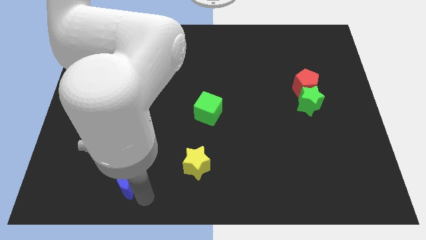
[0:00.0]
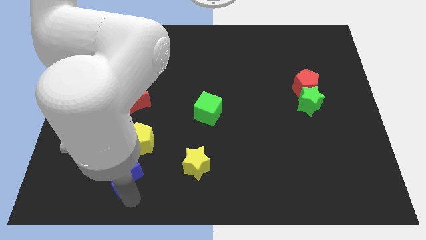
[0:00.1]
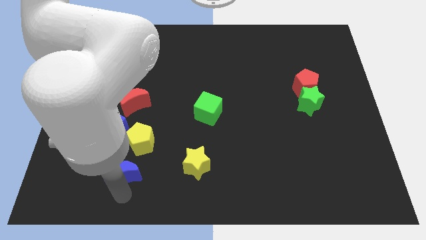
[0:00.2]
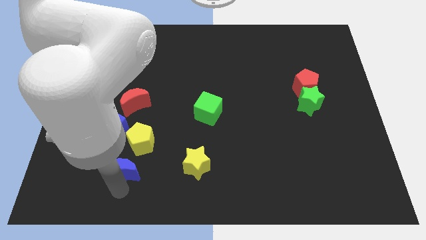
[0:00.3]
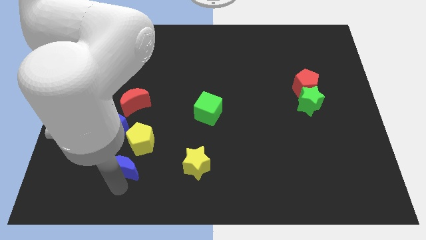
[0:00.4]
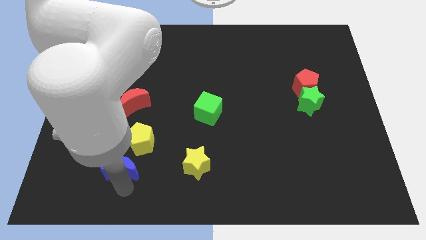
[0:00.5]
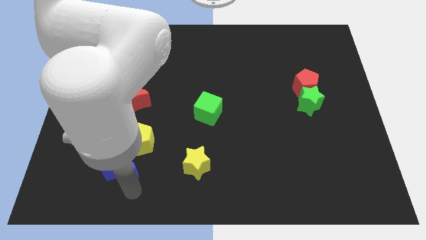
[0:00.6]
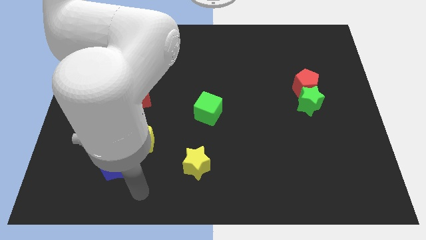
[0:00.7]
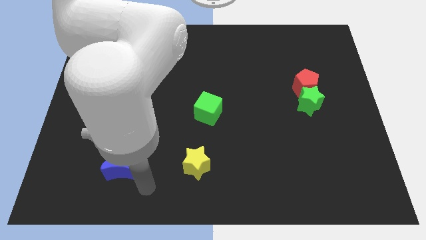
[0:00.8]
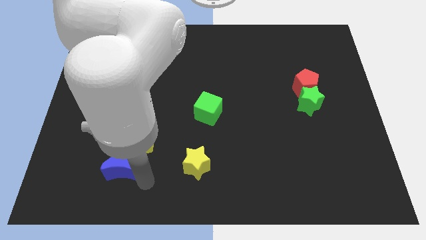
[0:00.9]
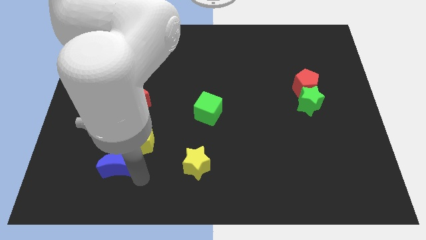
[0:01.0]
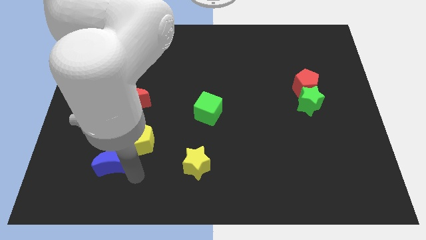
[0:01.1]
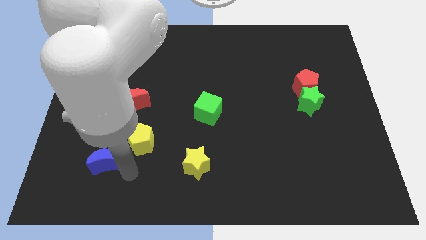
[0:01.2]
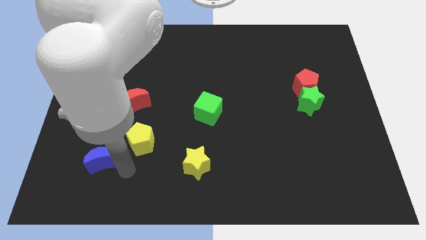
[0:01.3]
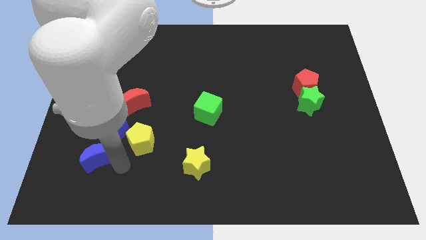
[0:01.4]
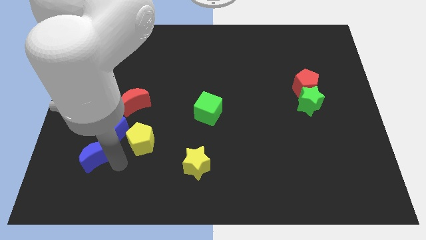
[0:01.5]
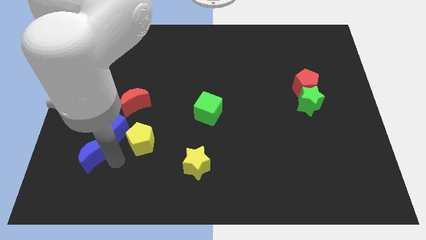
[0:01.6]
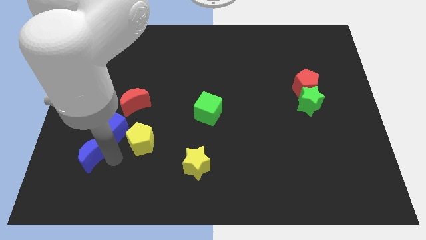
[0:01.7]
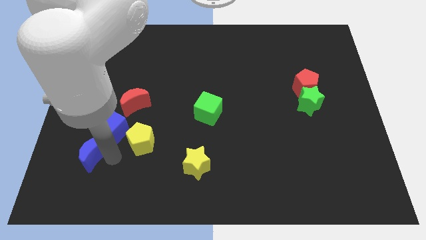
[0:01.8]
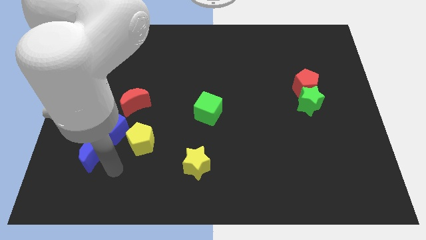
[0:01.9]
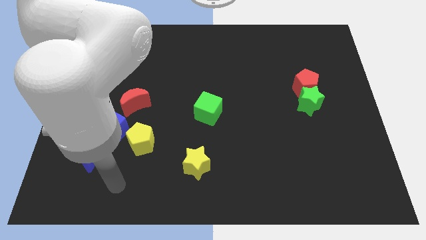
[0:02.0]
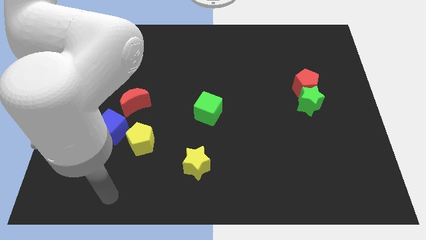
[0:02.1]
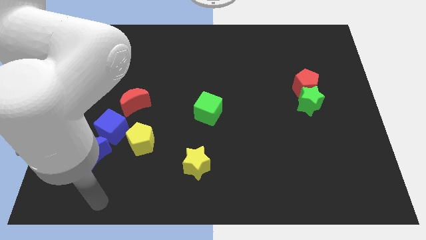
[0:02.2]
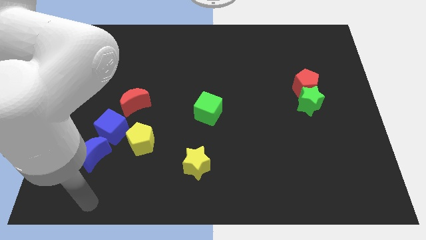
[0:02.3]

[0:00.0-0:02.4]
move blue moon beside blue cube

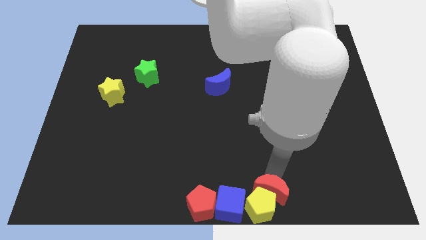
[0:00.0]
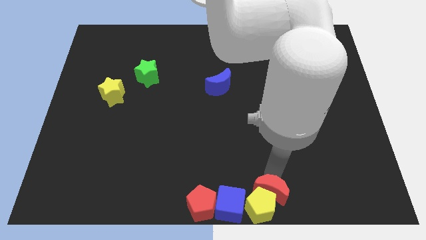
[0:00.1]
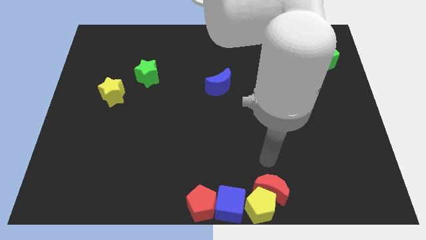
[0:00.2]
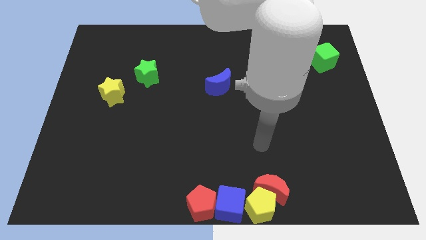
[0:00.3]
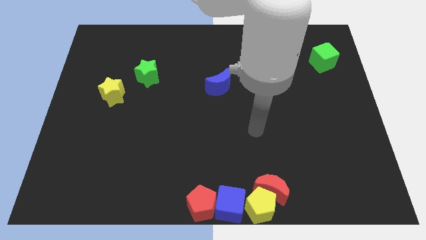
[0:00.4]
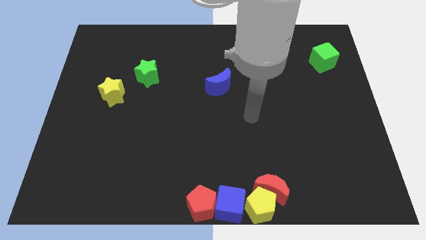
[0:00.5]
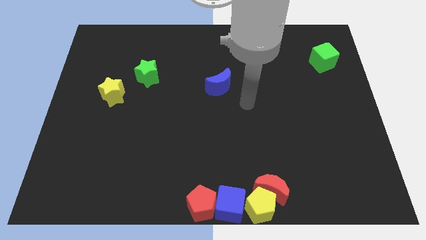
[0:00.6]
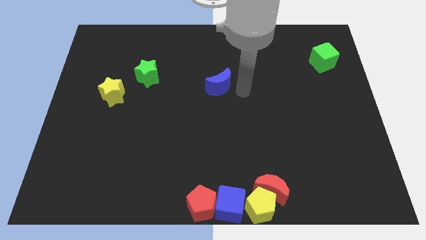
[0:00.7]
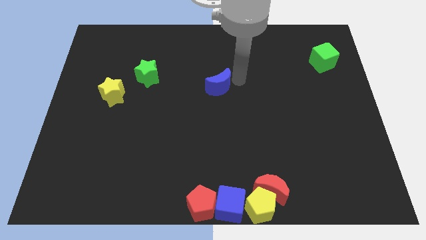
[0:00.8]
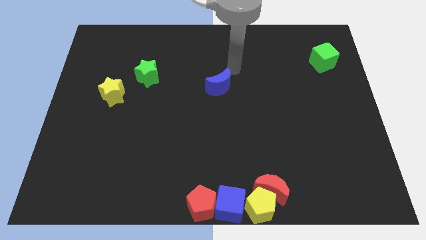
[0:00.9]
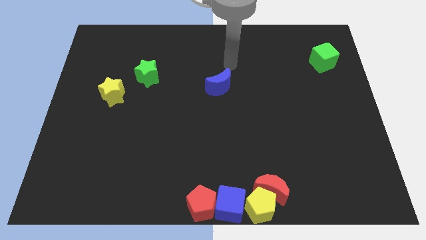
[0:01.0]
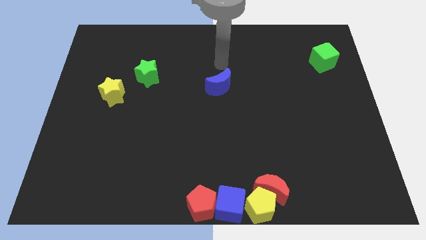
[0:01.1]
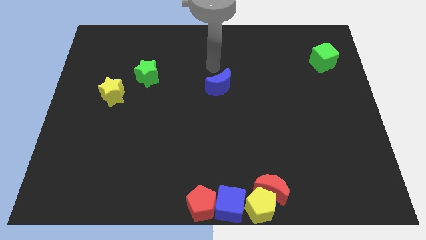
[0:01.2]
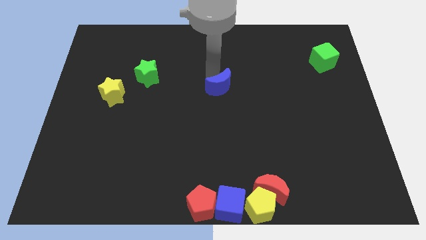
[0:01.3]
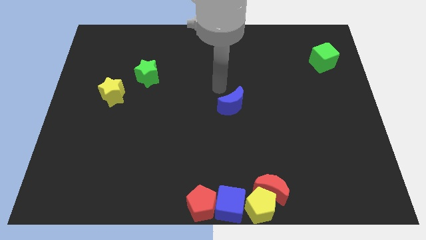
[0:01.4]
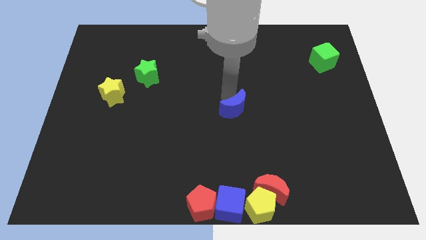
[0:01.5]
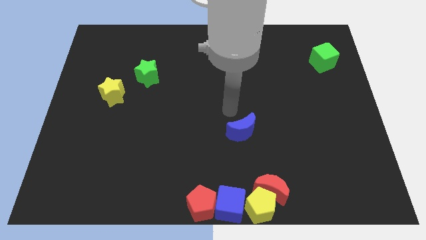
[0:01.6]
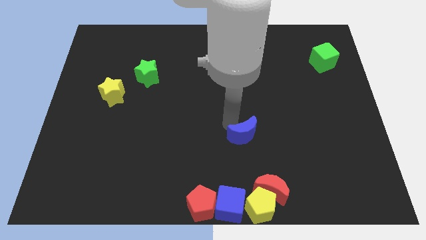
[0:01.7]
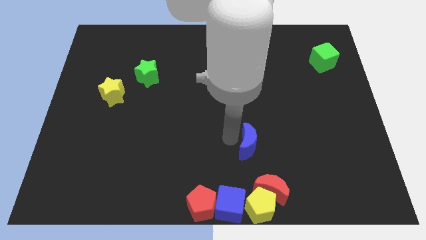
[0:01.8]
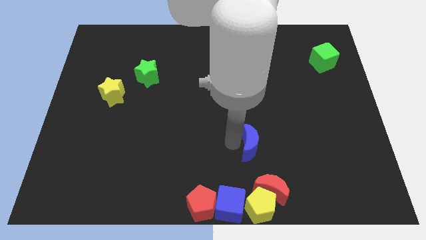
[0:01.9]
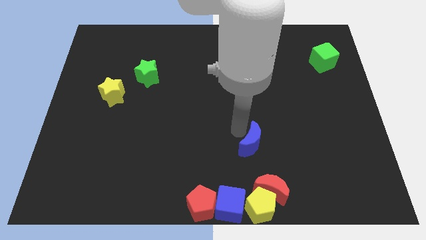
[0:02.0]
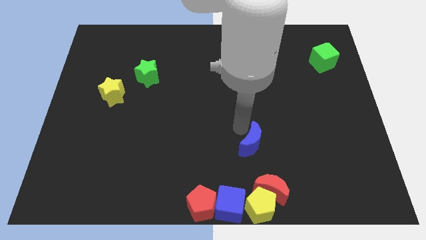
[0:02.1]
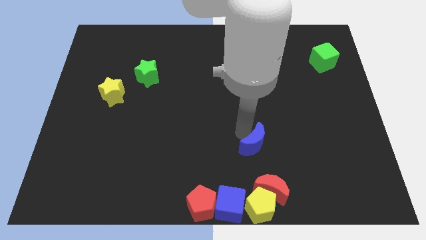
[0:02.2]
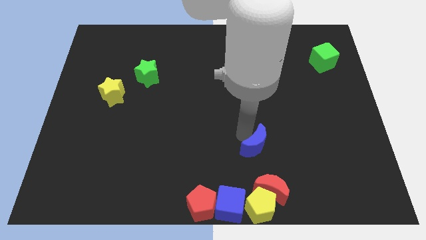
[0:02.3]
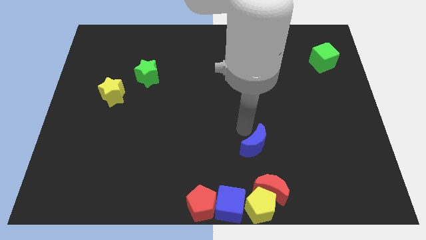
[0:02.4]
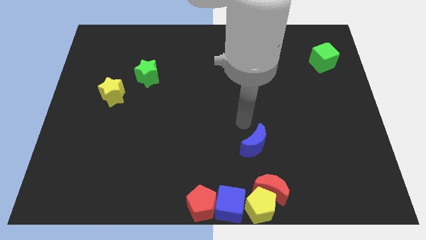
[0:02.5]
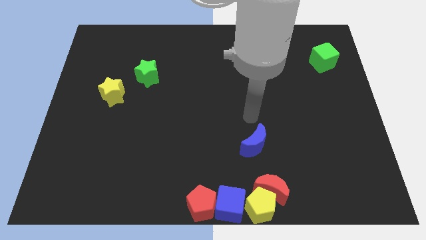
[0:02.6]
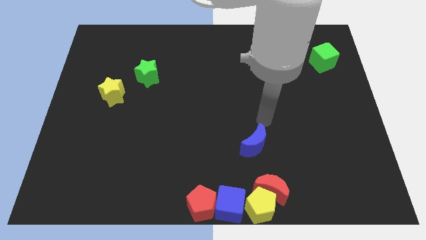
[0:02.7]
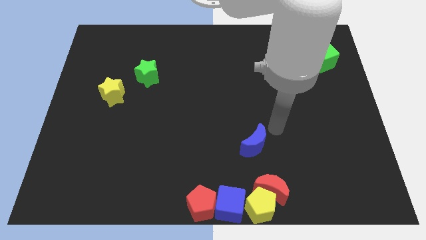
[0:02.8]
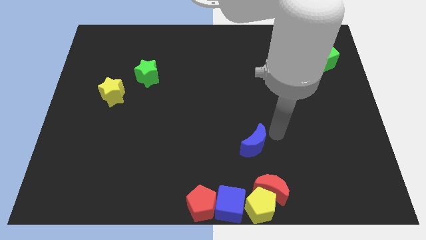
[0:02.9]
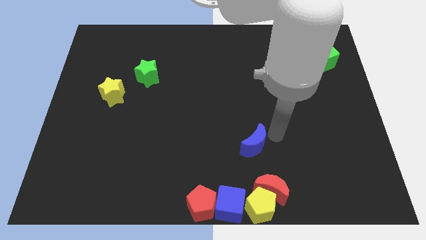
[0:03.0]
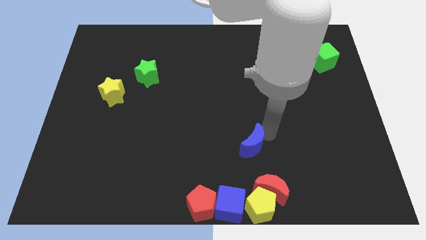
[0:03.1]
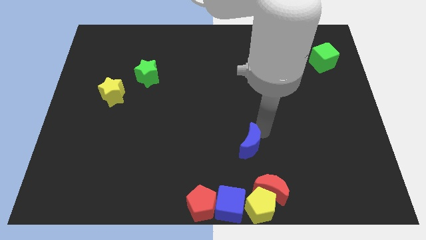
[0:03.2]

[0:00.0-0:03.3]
put the blue moon diagonally to the right of the blue cube

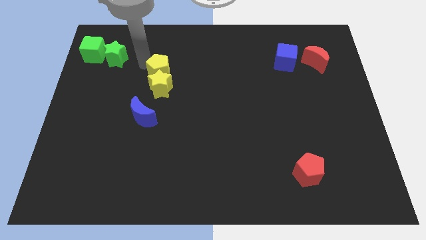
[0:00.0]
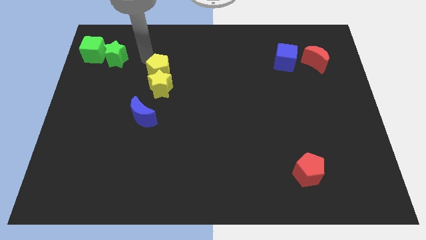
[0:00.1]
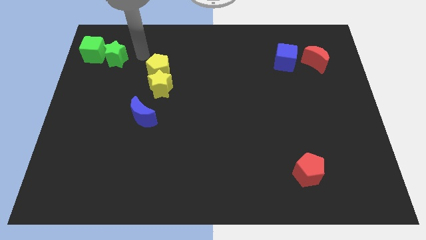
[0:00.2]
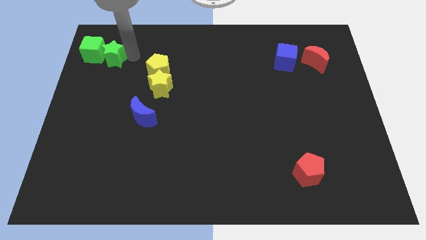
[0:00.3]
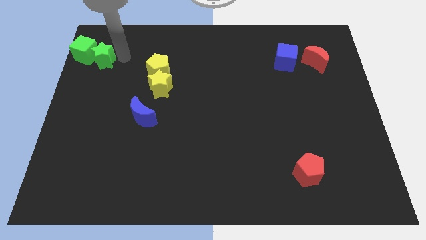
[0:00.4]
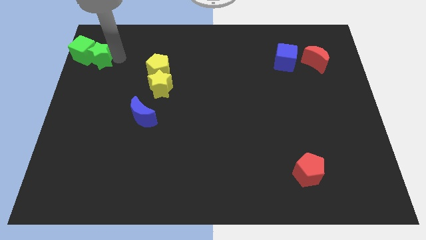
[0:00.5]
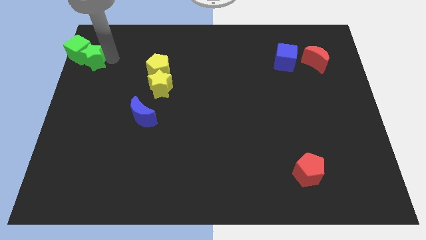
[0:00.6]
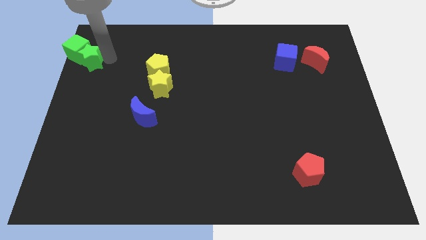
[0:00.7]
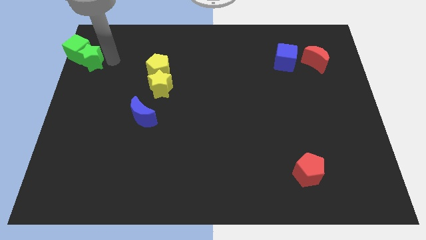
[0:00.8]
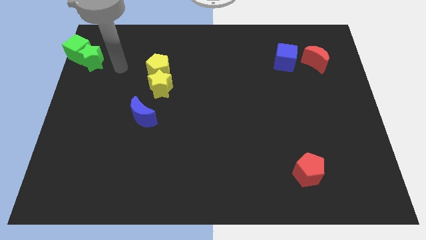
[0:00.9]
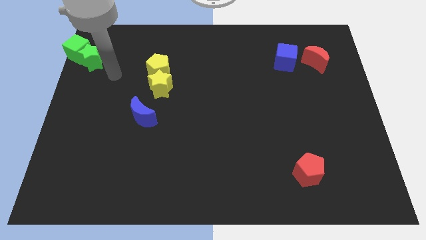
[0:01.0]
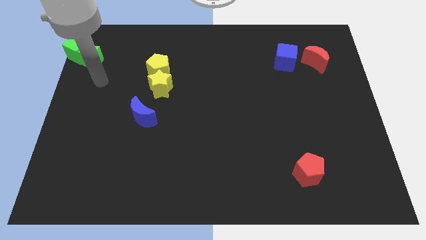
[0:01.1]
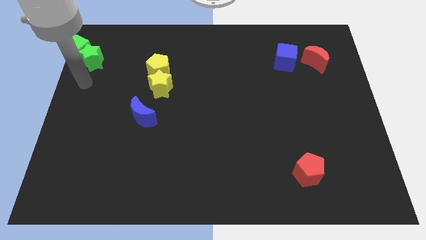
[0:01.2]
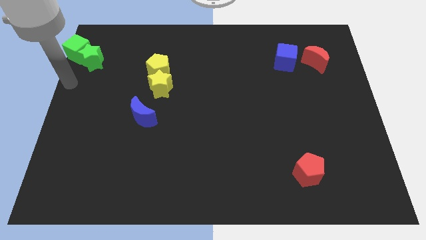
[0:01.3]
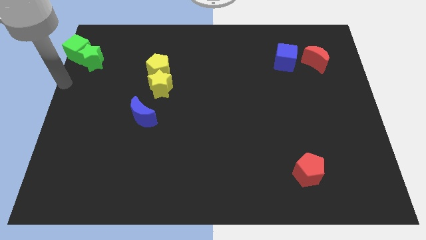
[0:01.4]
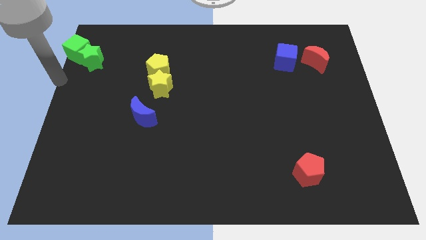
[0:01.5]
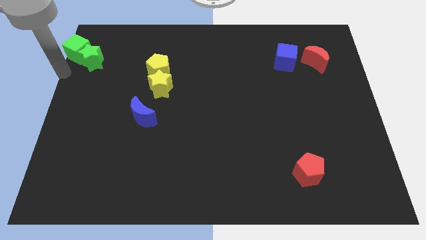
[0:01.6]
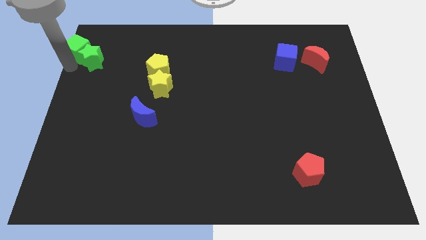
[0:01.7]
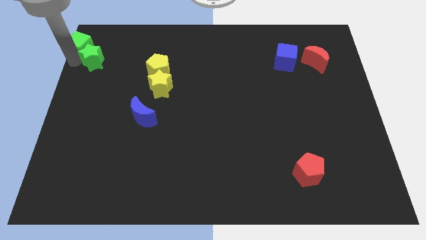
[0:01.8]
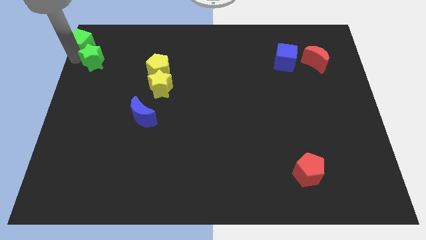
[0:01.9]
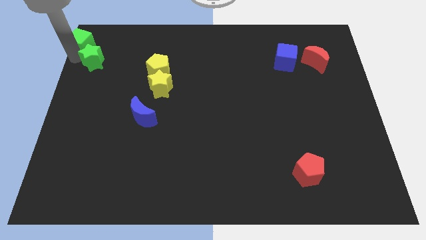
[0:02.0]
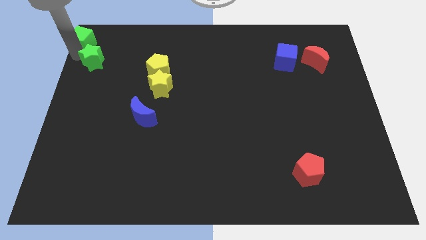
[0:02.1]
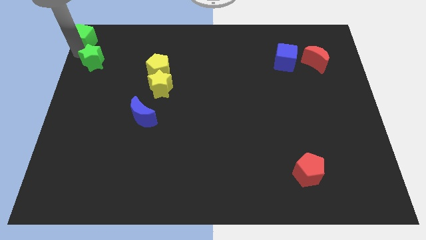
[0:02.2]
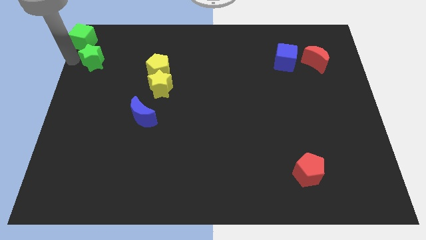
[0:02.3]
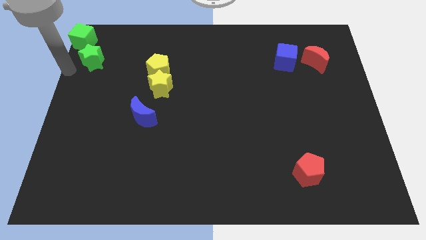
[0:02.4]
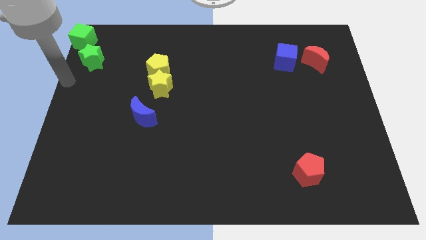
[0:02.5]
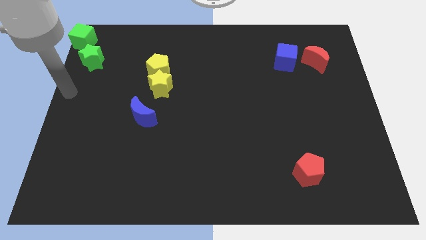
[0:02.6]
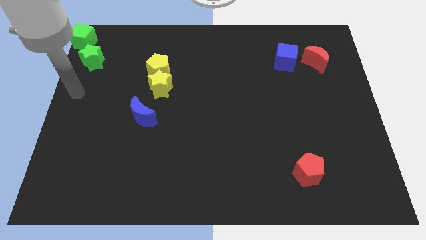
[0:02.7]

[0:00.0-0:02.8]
place the green cube to the top left

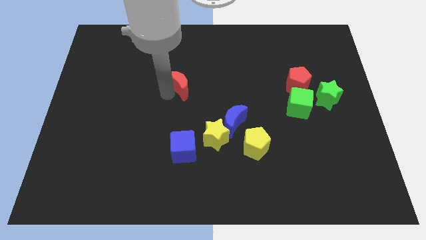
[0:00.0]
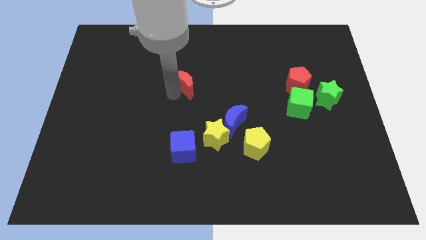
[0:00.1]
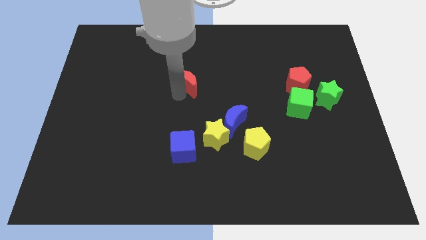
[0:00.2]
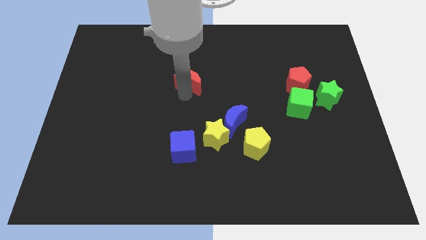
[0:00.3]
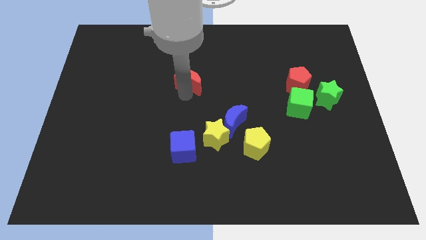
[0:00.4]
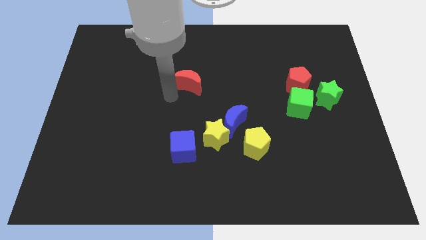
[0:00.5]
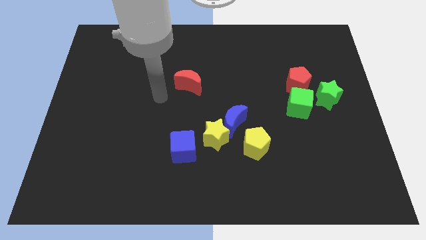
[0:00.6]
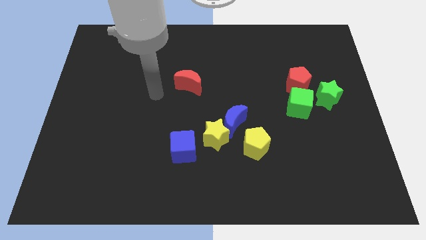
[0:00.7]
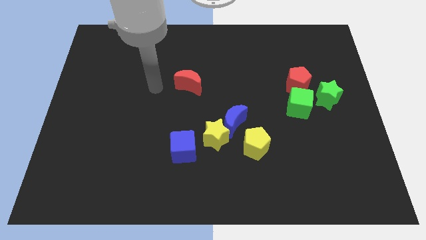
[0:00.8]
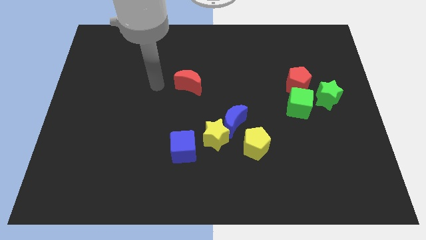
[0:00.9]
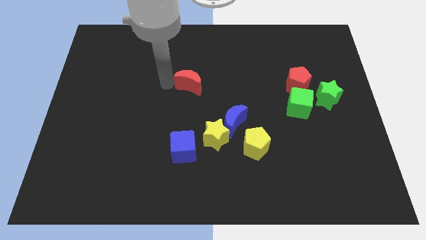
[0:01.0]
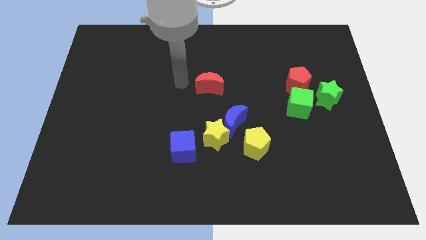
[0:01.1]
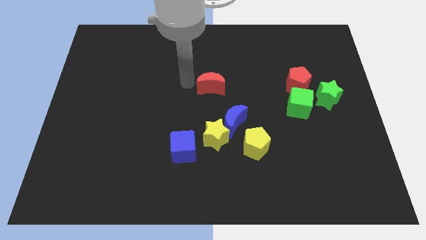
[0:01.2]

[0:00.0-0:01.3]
place red crescent to the top of the yellow star
